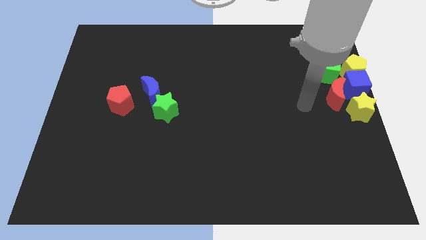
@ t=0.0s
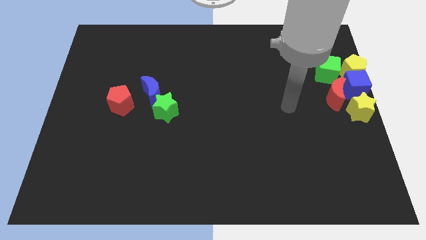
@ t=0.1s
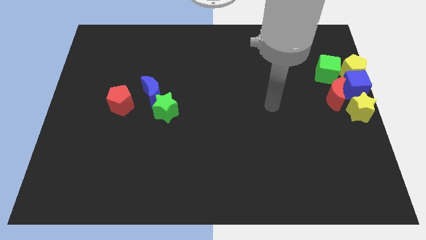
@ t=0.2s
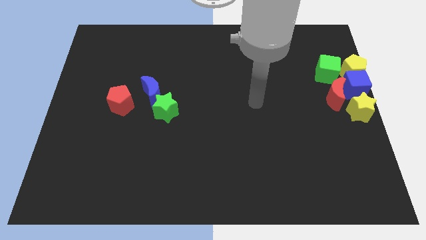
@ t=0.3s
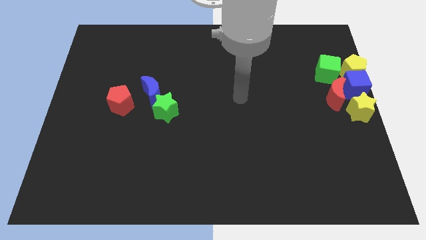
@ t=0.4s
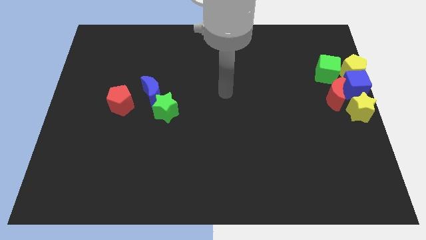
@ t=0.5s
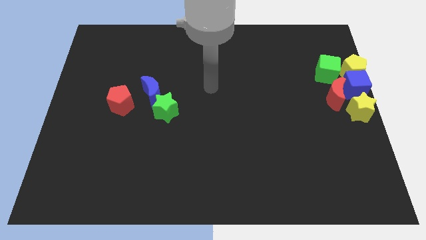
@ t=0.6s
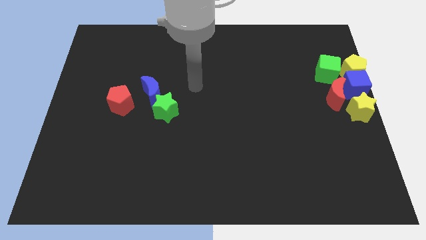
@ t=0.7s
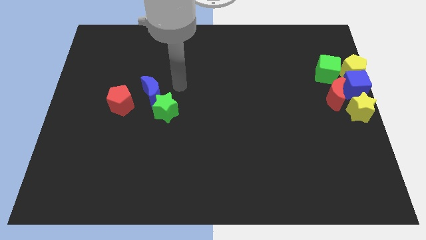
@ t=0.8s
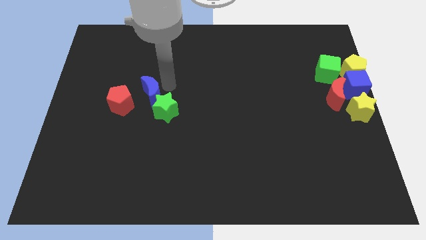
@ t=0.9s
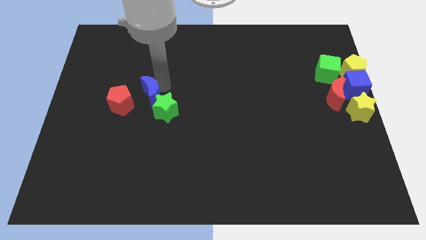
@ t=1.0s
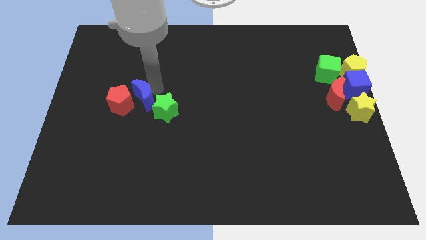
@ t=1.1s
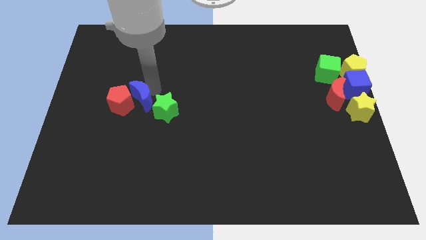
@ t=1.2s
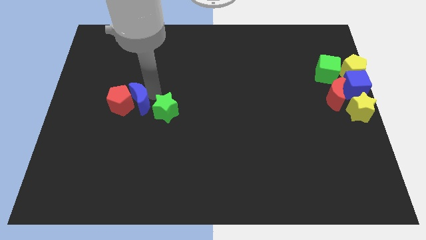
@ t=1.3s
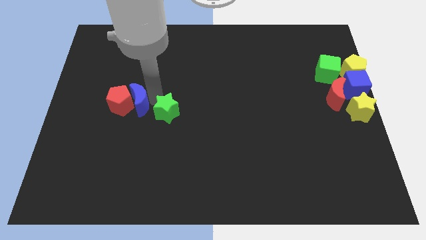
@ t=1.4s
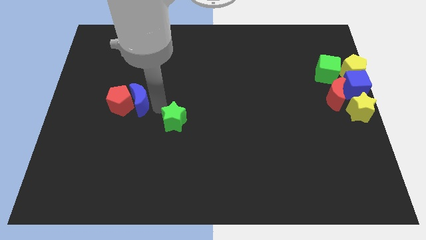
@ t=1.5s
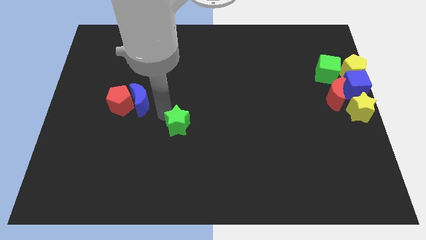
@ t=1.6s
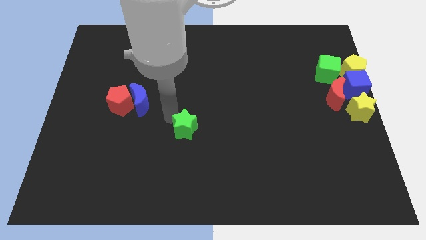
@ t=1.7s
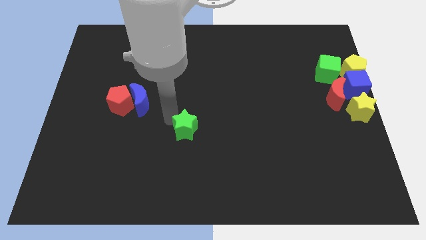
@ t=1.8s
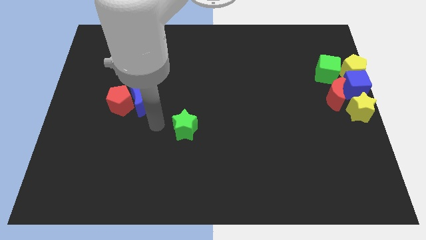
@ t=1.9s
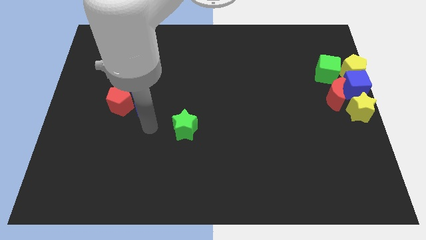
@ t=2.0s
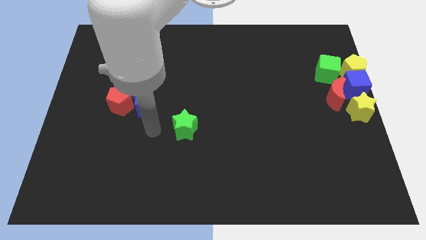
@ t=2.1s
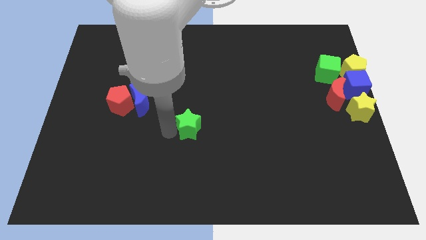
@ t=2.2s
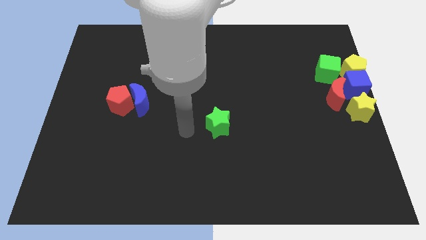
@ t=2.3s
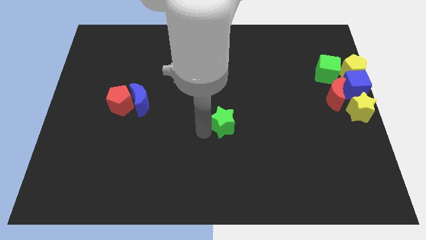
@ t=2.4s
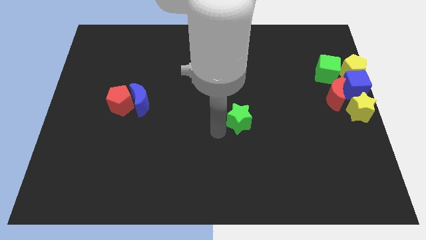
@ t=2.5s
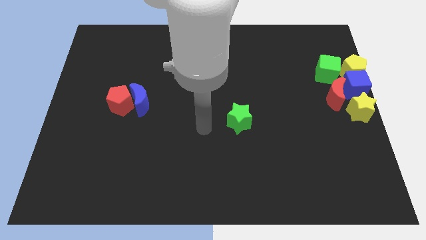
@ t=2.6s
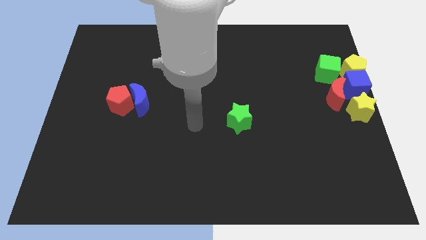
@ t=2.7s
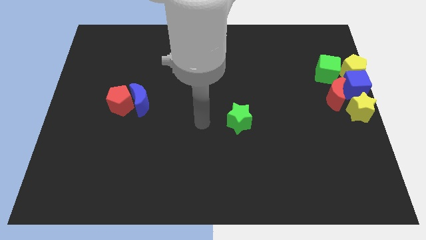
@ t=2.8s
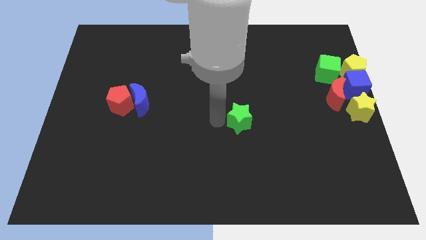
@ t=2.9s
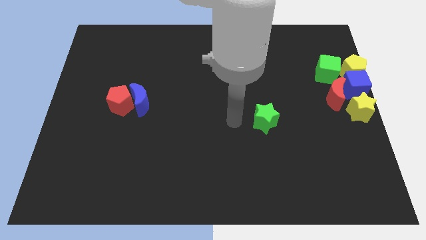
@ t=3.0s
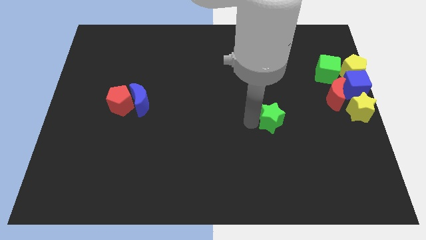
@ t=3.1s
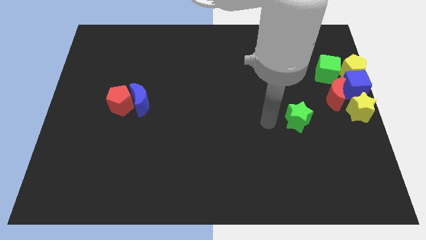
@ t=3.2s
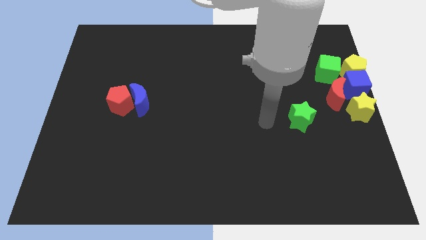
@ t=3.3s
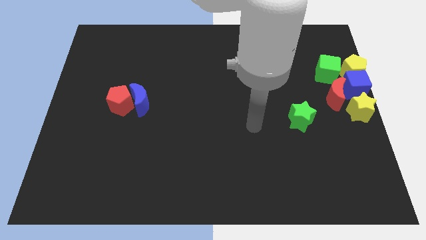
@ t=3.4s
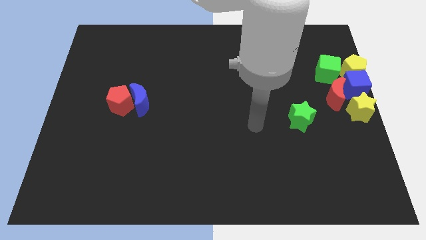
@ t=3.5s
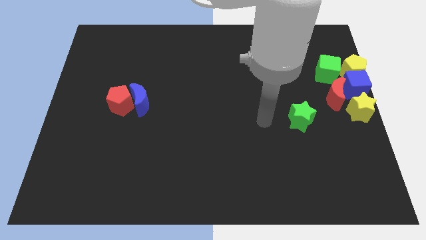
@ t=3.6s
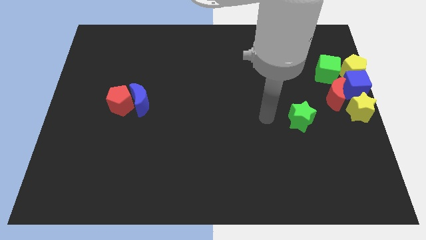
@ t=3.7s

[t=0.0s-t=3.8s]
push the green star to the right center of the board

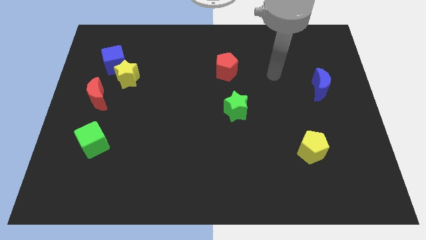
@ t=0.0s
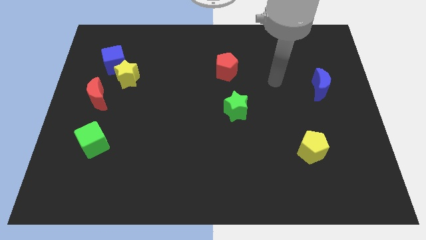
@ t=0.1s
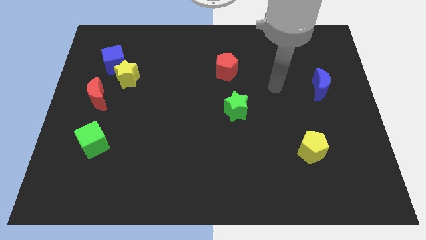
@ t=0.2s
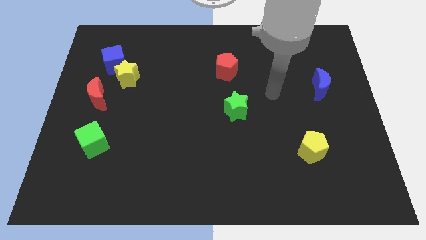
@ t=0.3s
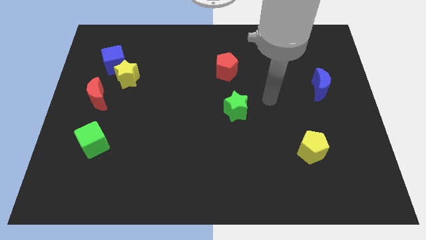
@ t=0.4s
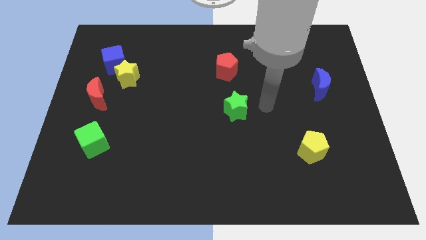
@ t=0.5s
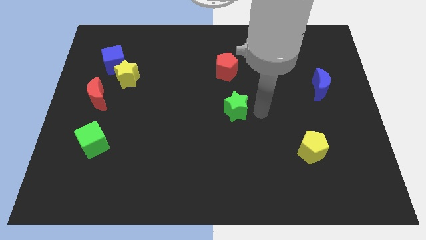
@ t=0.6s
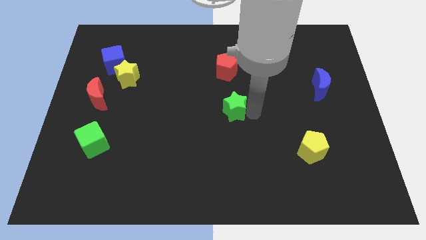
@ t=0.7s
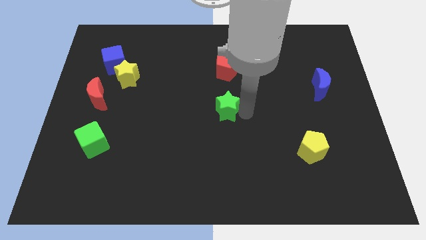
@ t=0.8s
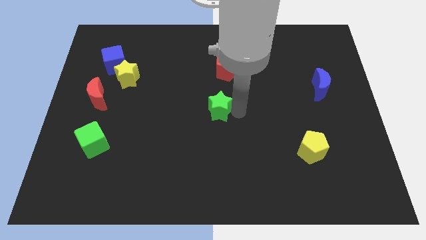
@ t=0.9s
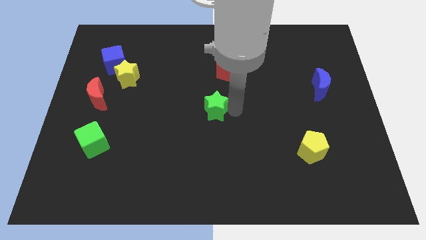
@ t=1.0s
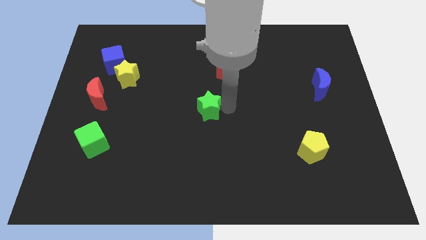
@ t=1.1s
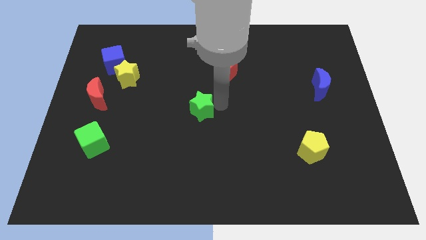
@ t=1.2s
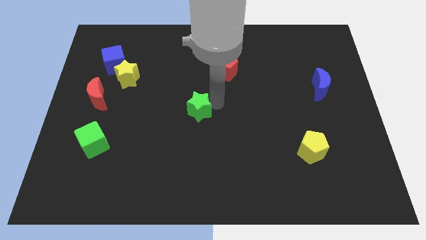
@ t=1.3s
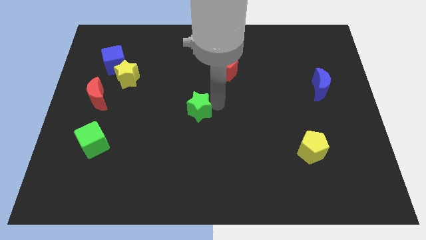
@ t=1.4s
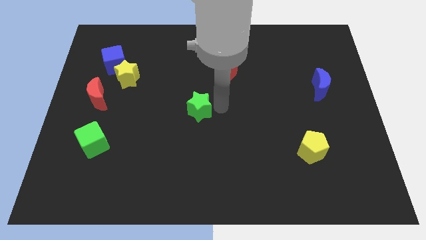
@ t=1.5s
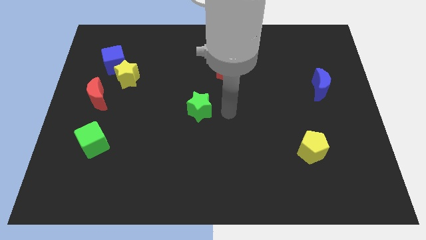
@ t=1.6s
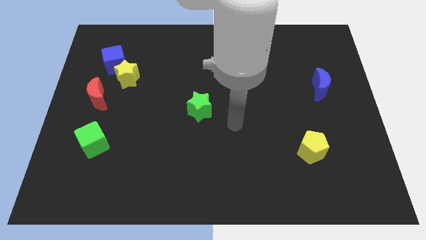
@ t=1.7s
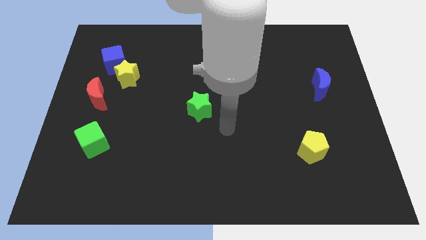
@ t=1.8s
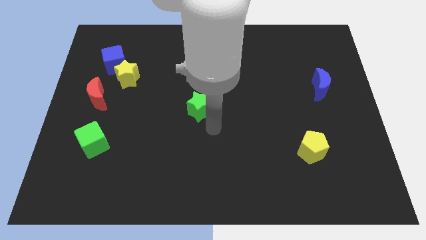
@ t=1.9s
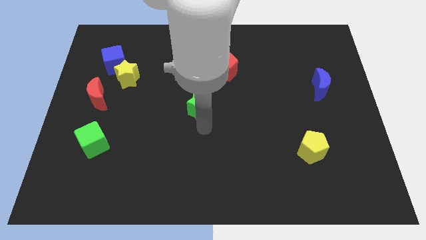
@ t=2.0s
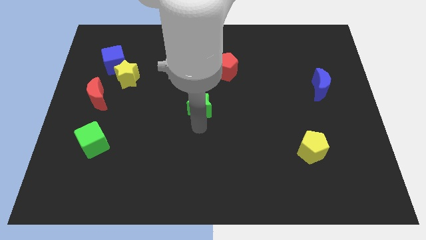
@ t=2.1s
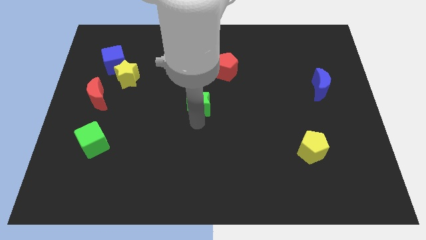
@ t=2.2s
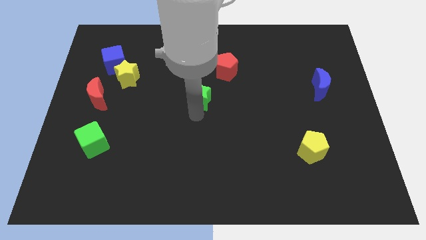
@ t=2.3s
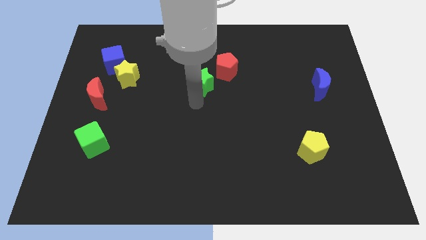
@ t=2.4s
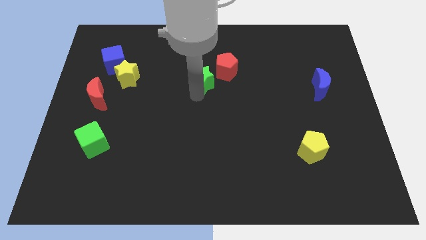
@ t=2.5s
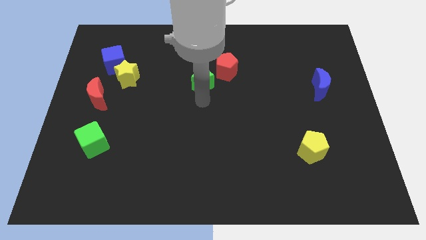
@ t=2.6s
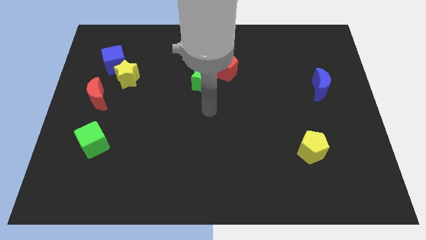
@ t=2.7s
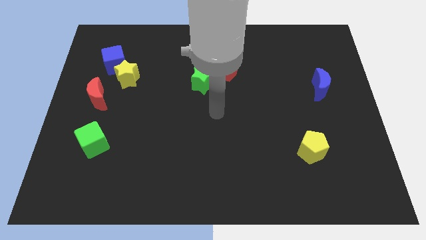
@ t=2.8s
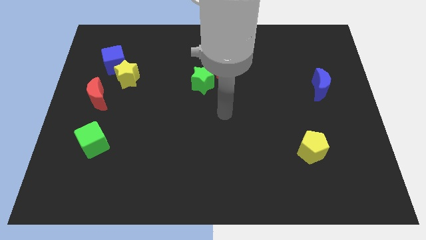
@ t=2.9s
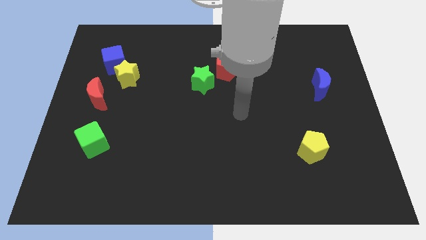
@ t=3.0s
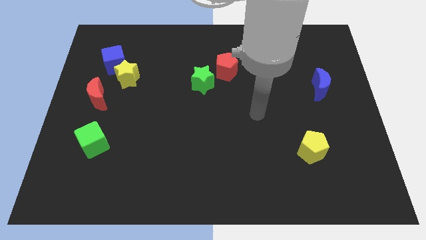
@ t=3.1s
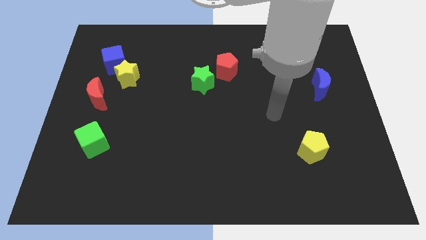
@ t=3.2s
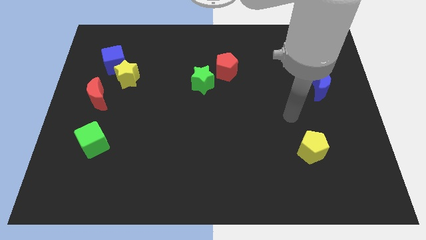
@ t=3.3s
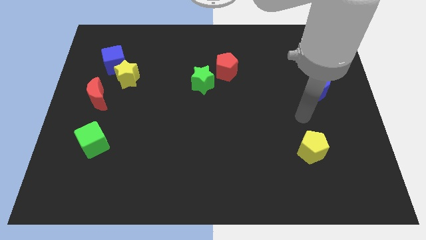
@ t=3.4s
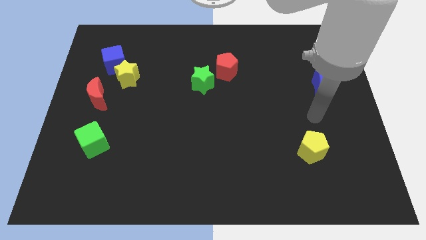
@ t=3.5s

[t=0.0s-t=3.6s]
move the green star to the bottom left of the red pentagon

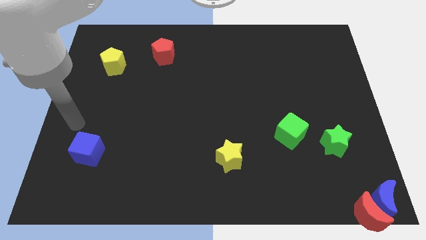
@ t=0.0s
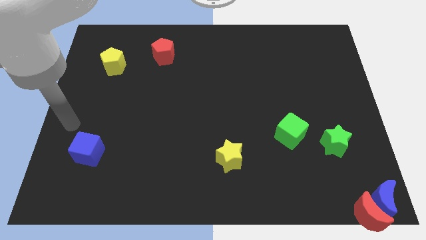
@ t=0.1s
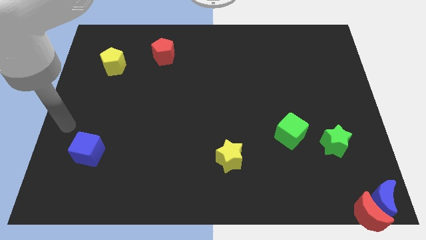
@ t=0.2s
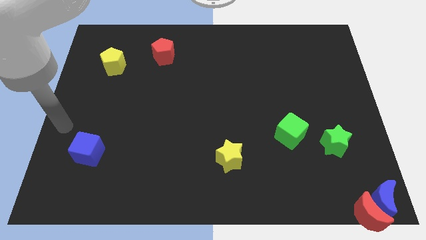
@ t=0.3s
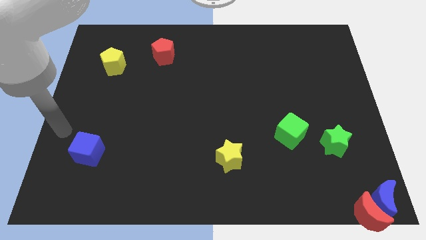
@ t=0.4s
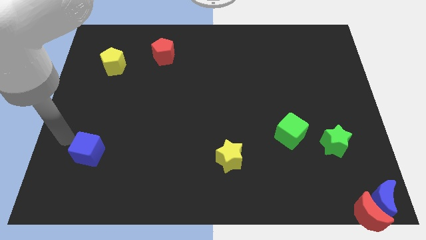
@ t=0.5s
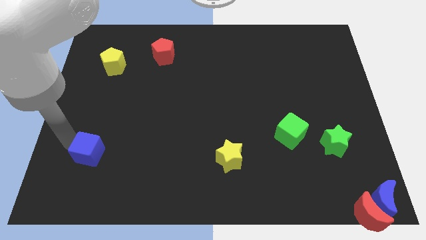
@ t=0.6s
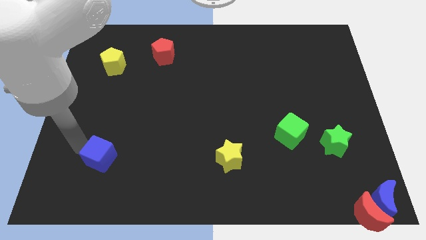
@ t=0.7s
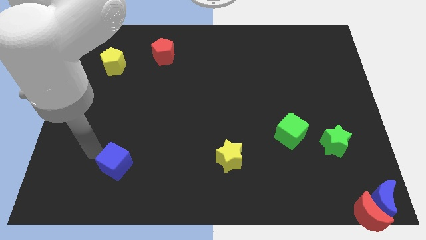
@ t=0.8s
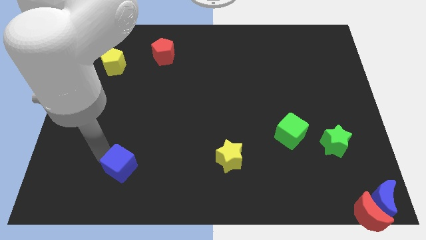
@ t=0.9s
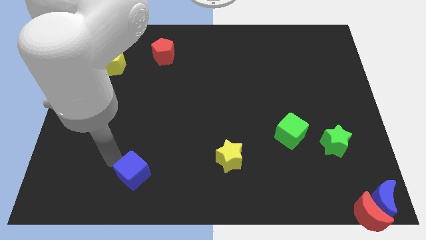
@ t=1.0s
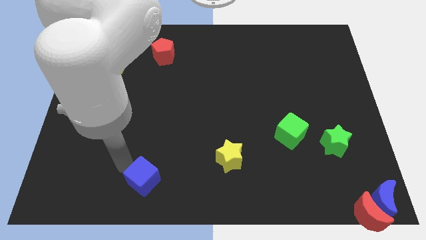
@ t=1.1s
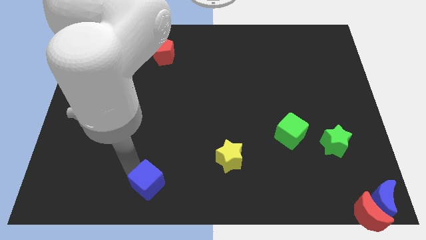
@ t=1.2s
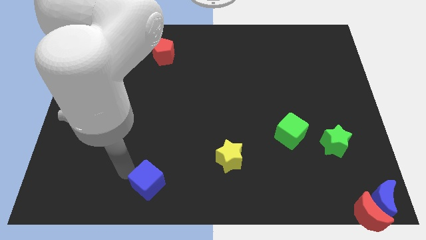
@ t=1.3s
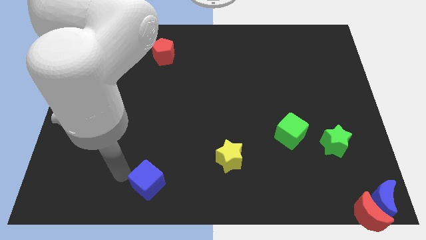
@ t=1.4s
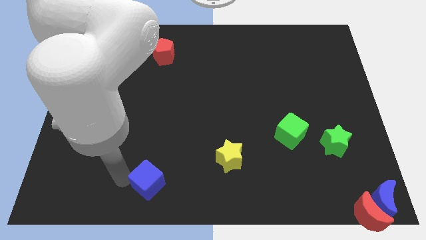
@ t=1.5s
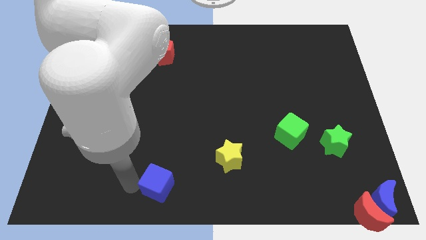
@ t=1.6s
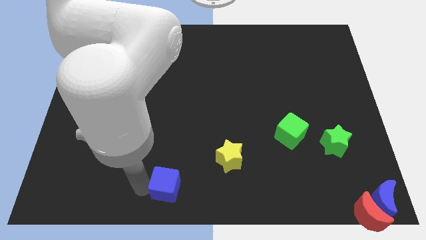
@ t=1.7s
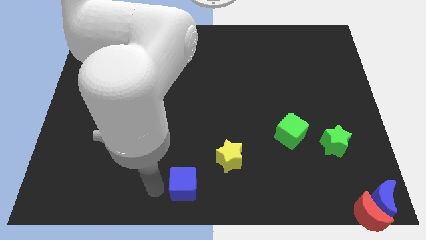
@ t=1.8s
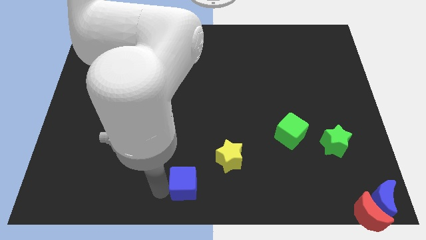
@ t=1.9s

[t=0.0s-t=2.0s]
move the blue cube to the bottom left of the yellow star
